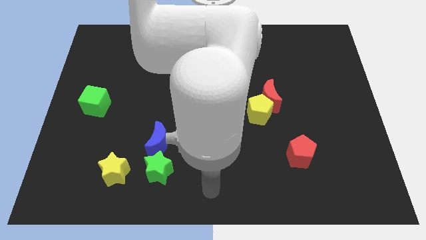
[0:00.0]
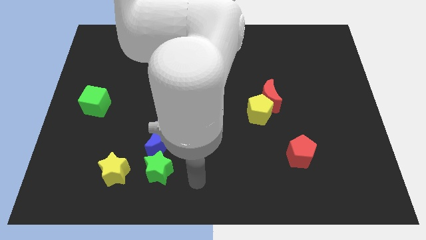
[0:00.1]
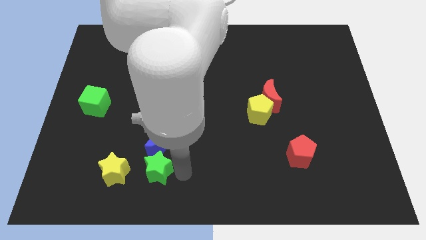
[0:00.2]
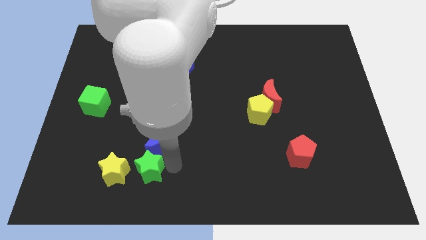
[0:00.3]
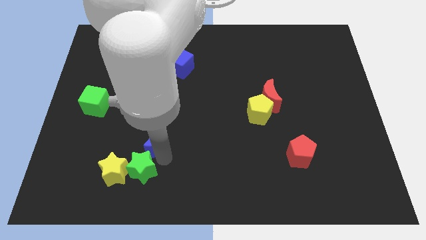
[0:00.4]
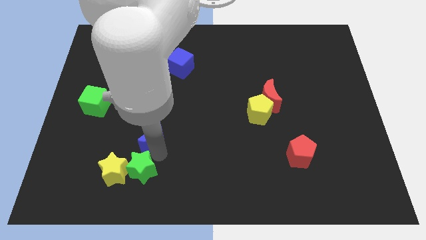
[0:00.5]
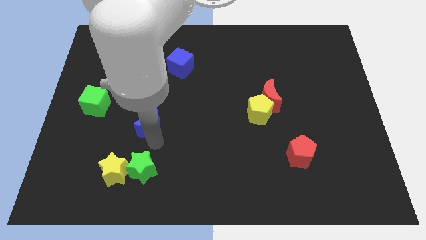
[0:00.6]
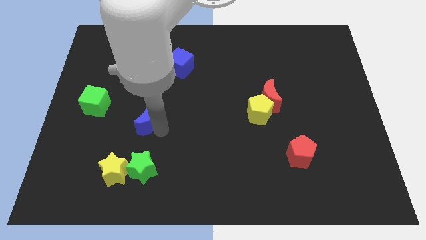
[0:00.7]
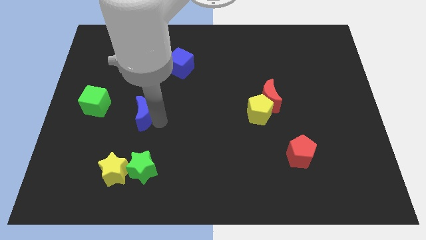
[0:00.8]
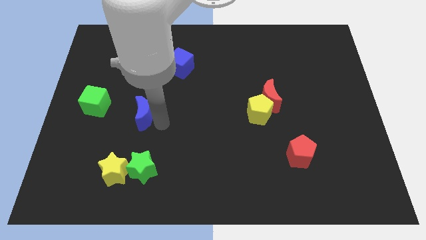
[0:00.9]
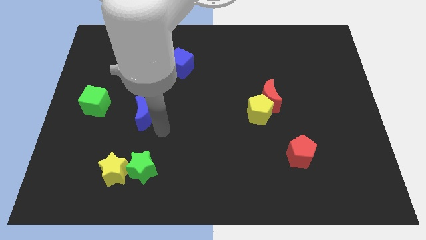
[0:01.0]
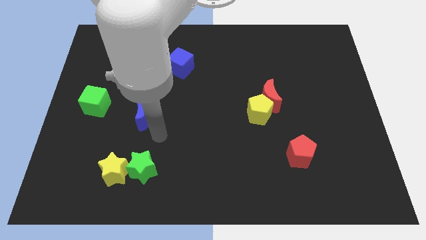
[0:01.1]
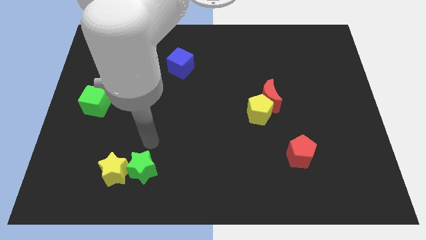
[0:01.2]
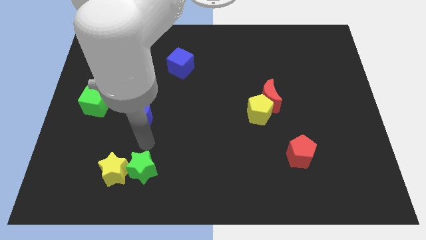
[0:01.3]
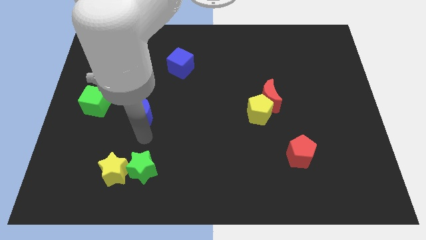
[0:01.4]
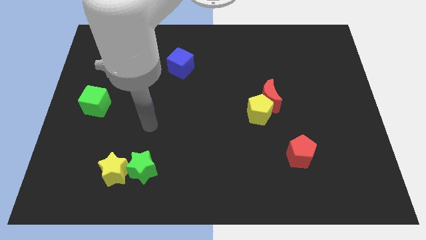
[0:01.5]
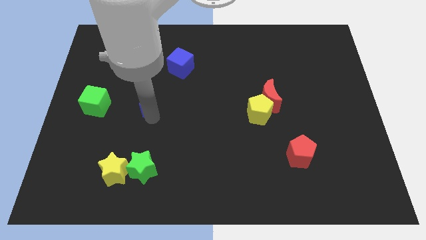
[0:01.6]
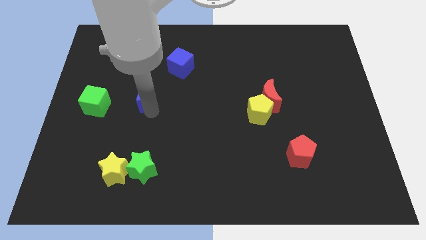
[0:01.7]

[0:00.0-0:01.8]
separate the blue moon from the green star

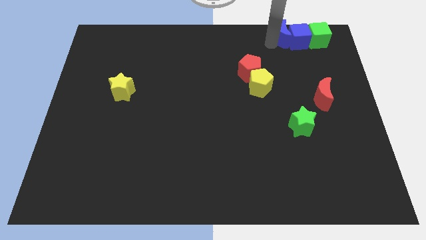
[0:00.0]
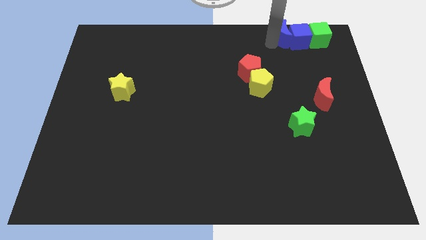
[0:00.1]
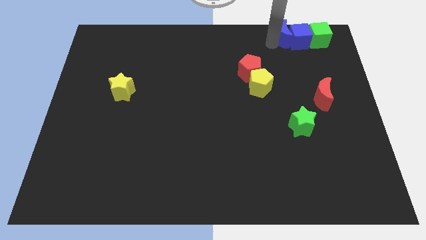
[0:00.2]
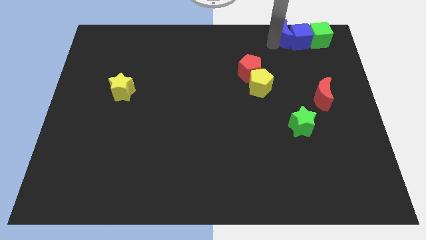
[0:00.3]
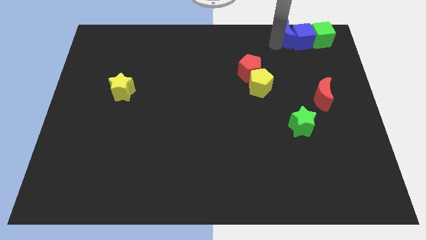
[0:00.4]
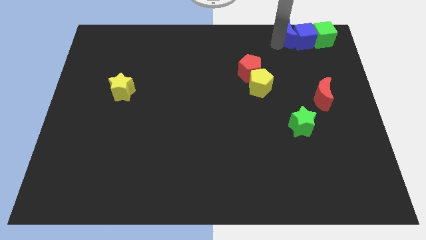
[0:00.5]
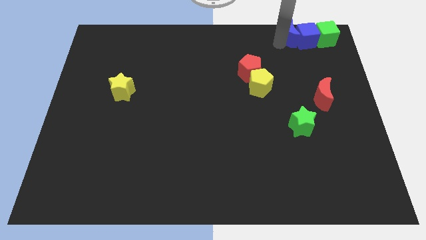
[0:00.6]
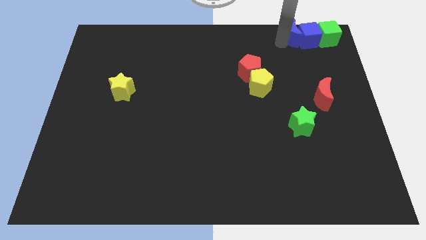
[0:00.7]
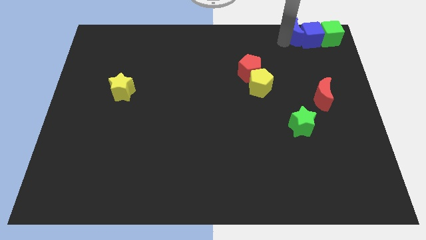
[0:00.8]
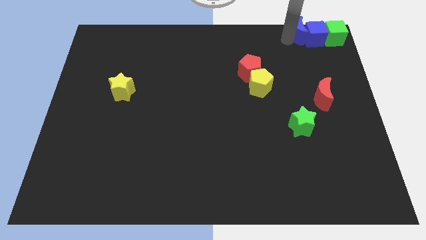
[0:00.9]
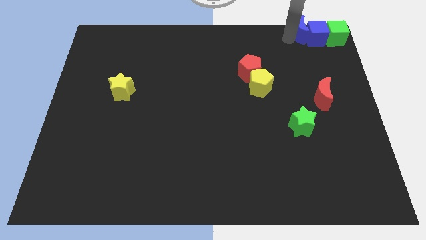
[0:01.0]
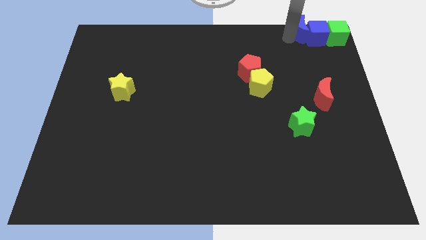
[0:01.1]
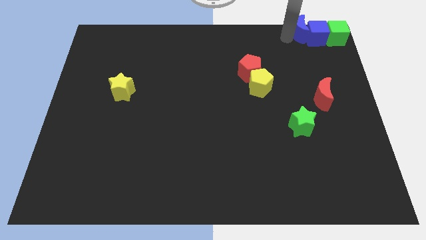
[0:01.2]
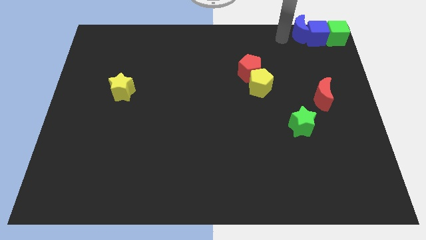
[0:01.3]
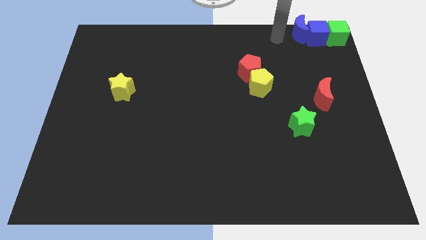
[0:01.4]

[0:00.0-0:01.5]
push the group of blue blocks and green cube to the top right corner of the board

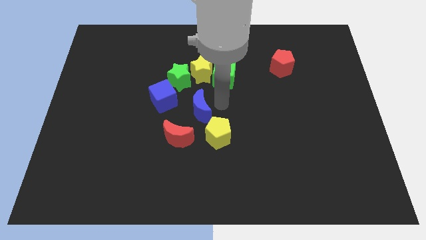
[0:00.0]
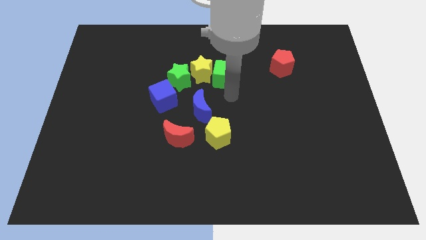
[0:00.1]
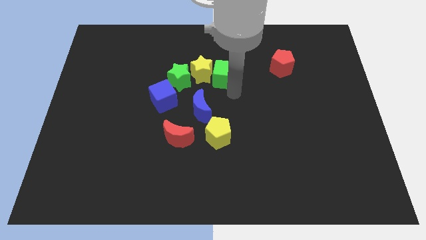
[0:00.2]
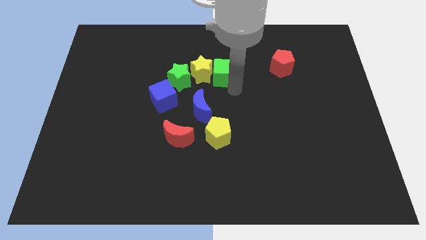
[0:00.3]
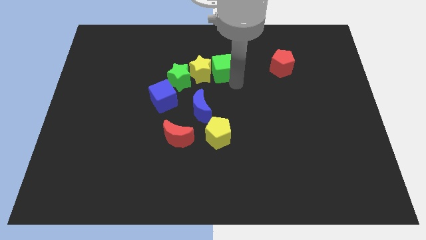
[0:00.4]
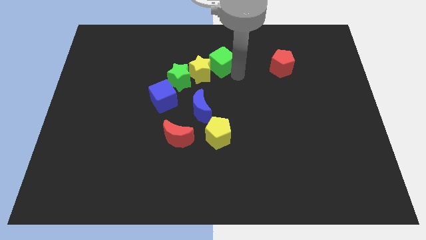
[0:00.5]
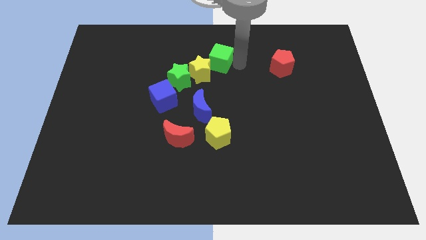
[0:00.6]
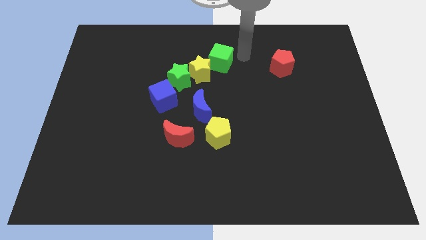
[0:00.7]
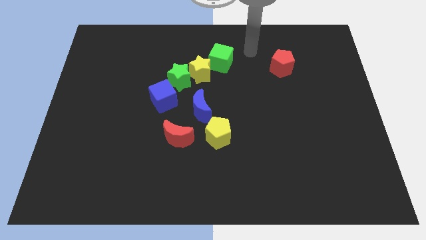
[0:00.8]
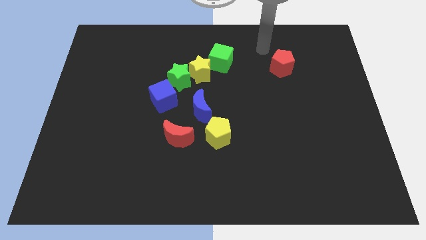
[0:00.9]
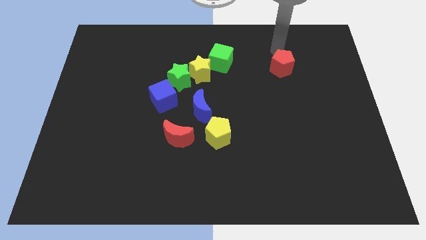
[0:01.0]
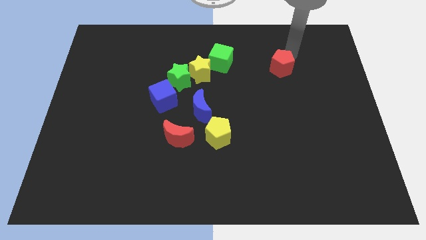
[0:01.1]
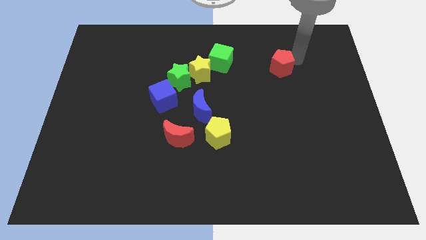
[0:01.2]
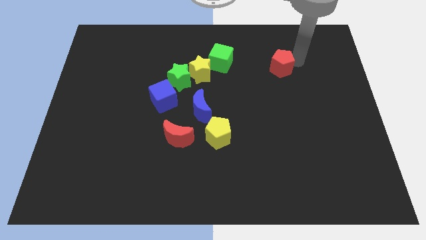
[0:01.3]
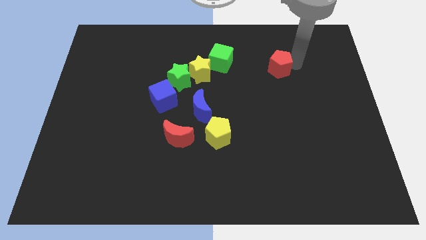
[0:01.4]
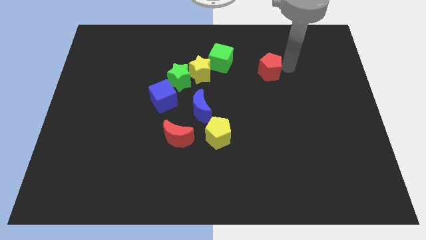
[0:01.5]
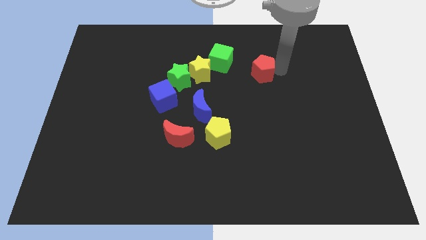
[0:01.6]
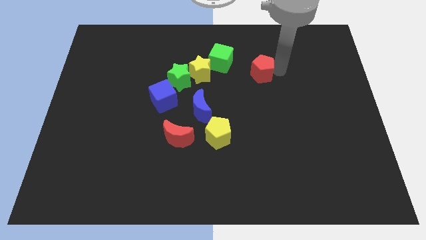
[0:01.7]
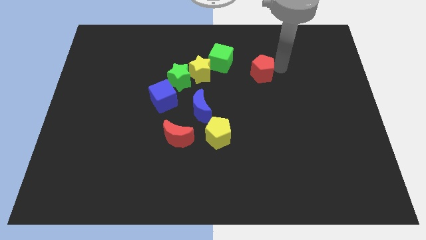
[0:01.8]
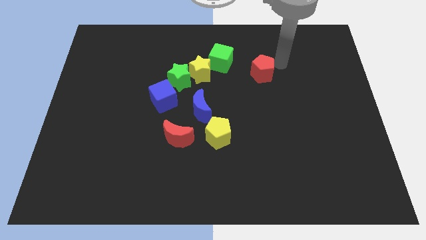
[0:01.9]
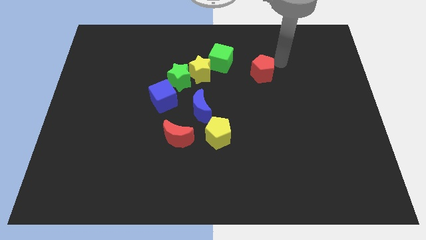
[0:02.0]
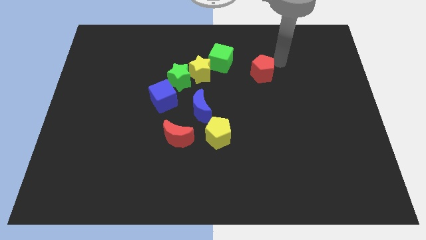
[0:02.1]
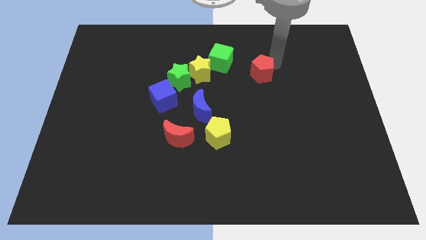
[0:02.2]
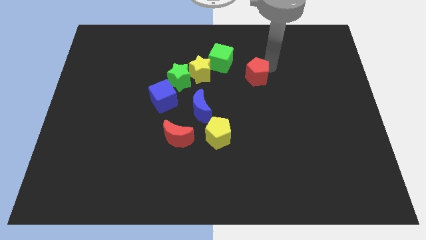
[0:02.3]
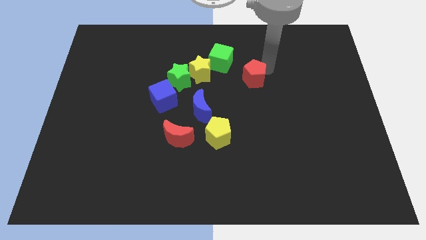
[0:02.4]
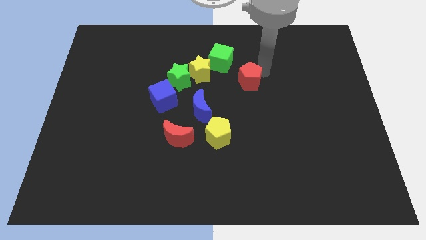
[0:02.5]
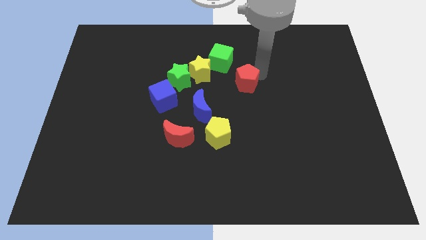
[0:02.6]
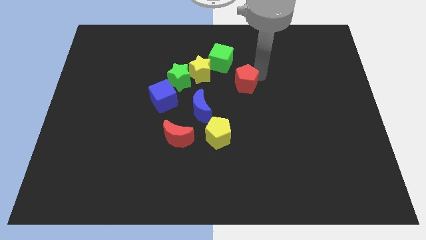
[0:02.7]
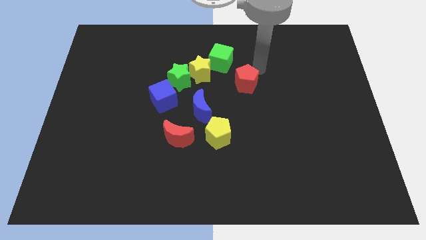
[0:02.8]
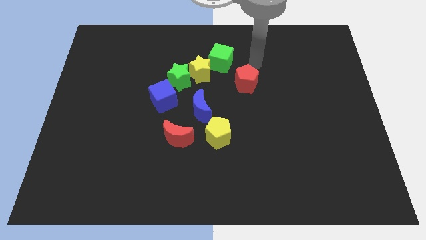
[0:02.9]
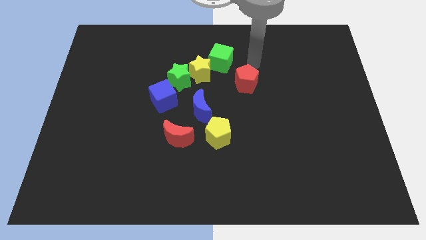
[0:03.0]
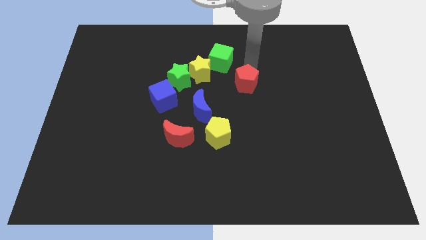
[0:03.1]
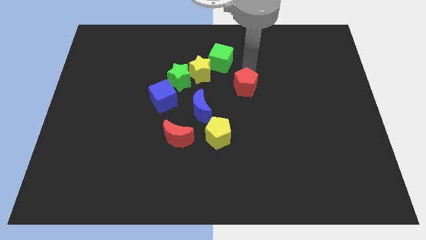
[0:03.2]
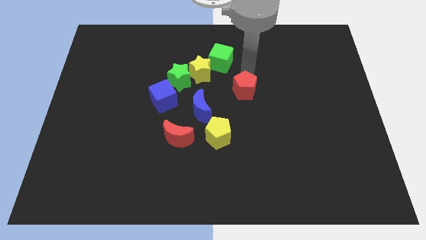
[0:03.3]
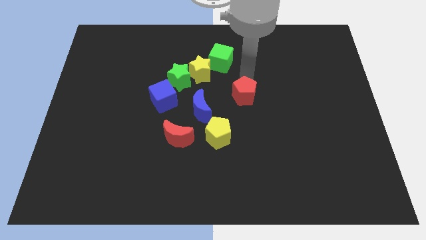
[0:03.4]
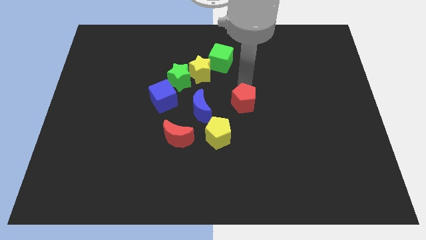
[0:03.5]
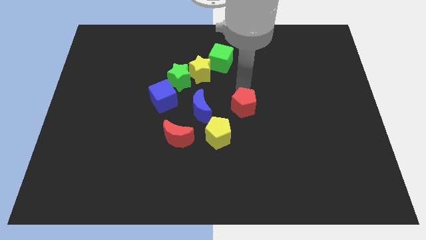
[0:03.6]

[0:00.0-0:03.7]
place the red pentagon parallel to the blue moon

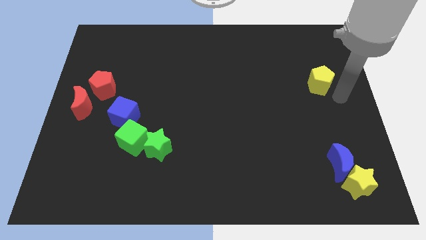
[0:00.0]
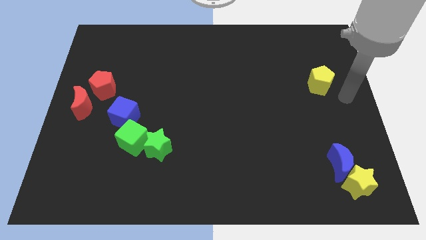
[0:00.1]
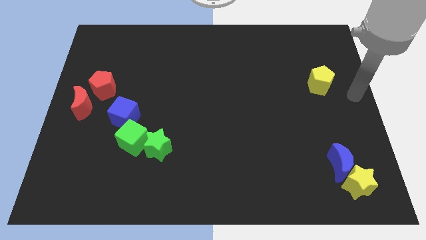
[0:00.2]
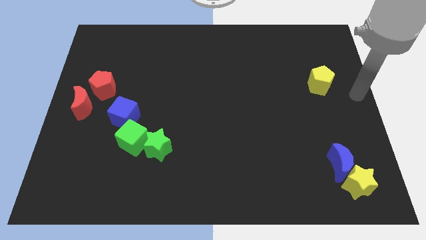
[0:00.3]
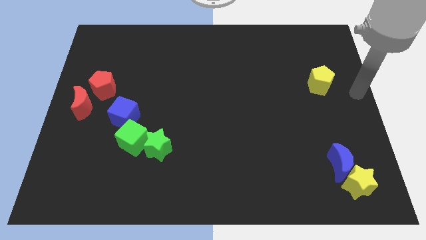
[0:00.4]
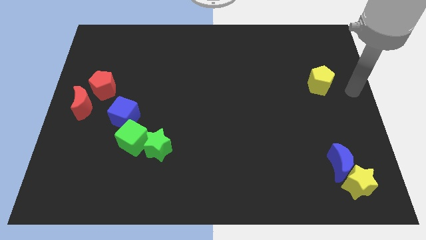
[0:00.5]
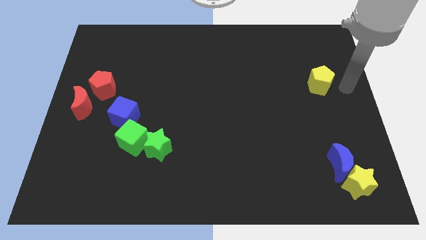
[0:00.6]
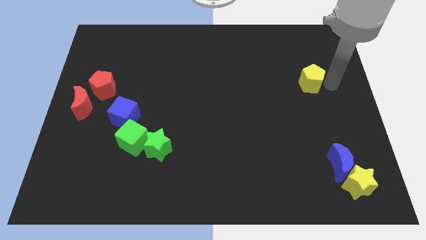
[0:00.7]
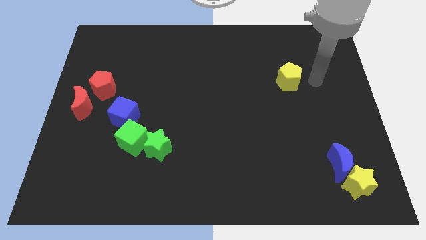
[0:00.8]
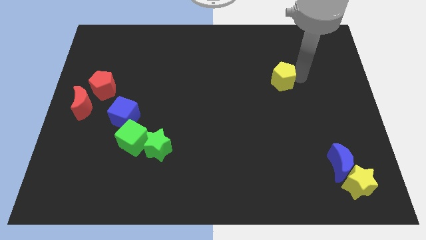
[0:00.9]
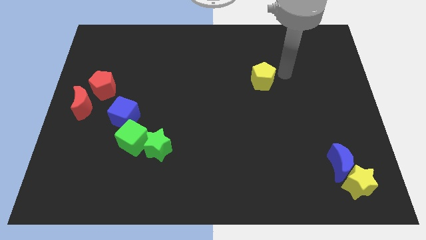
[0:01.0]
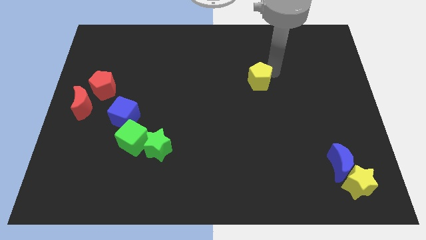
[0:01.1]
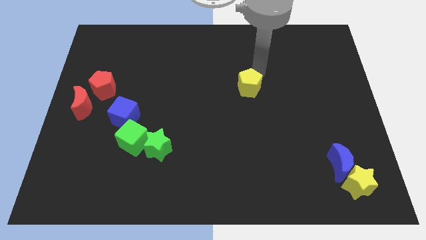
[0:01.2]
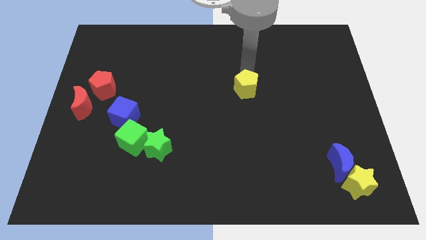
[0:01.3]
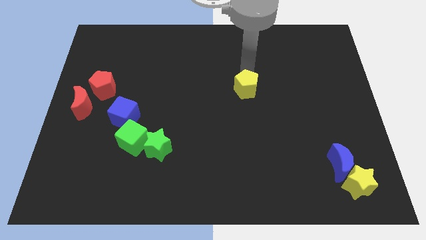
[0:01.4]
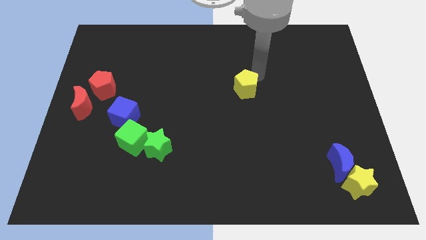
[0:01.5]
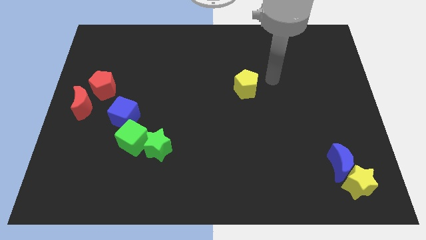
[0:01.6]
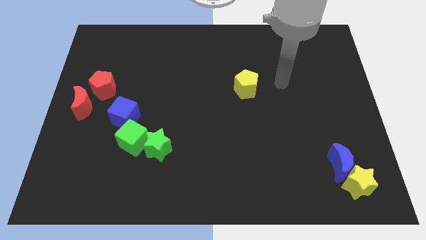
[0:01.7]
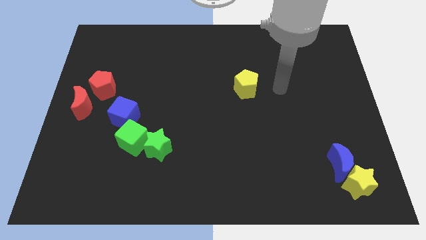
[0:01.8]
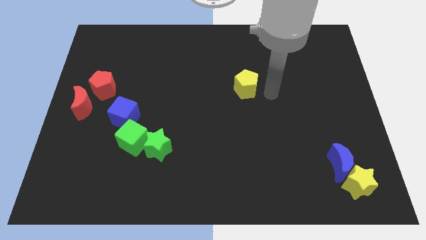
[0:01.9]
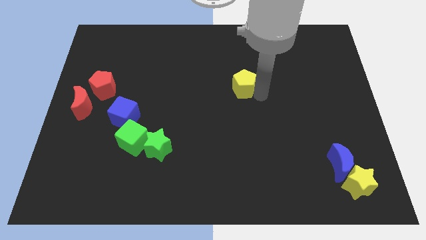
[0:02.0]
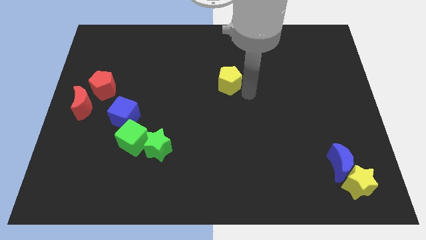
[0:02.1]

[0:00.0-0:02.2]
push the yellow pentagon towards the center of the board
